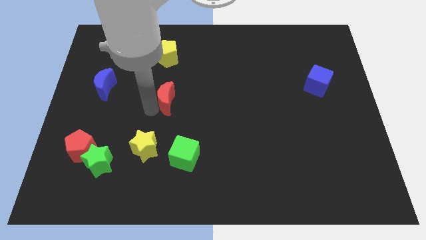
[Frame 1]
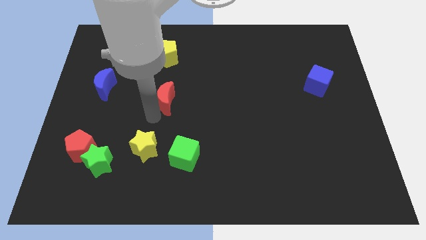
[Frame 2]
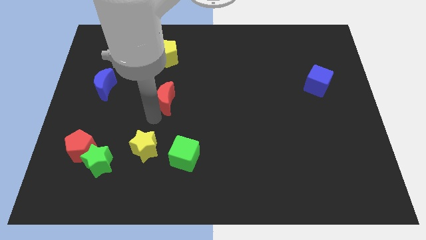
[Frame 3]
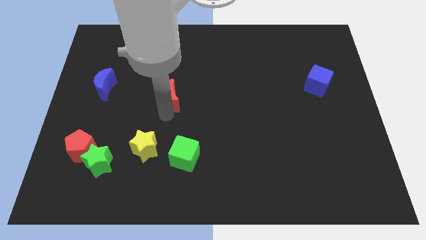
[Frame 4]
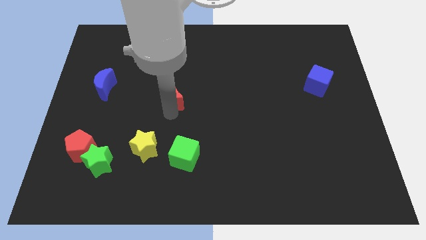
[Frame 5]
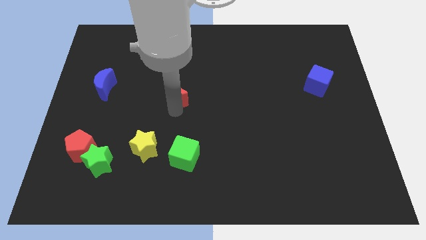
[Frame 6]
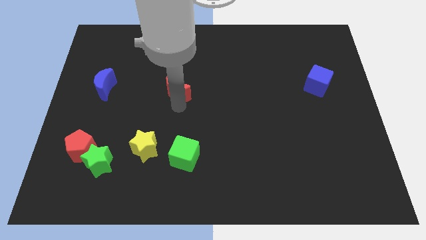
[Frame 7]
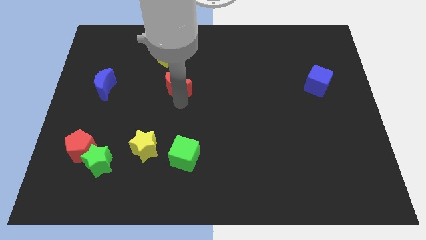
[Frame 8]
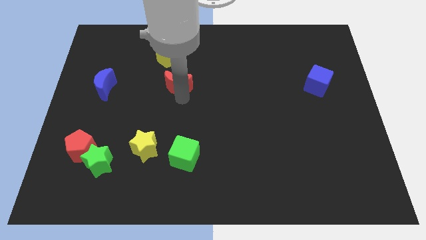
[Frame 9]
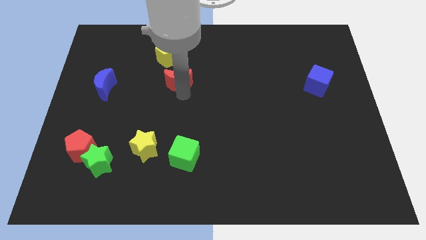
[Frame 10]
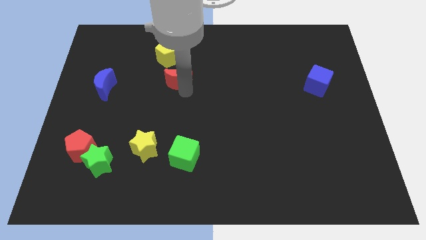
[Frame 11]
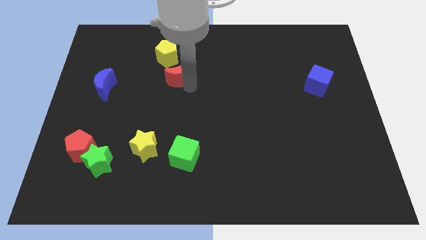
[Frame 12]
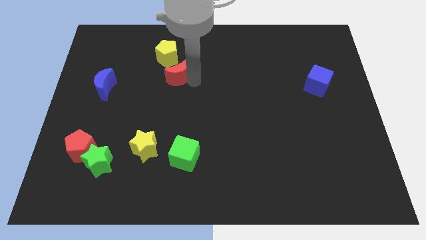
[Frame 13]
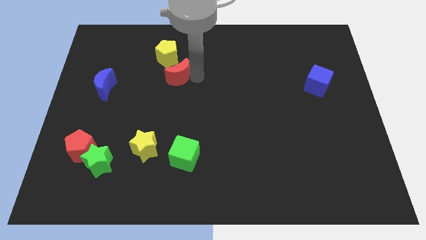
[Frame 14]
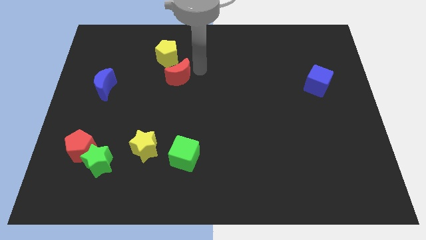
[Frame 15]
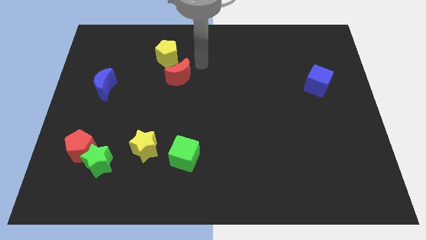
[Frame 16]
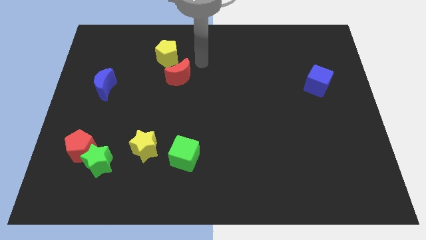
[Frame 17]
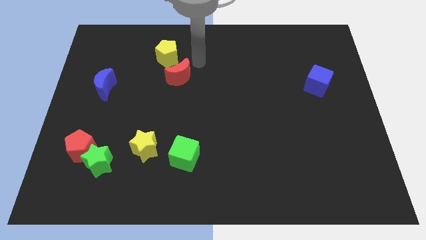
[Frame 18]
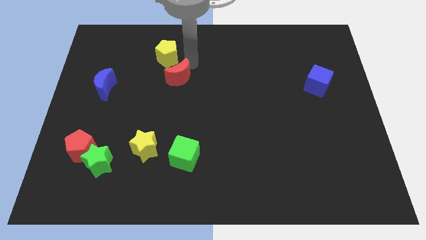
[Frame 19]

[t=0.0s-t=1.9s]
move the red moon to the bottom of the yellow pentagon

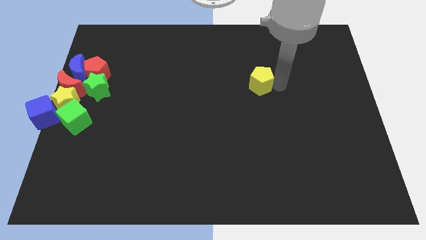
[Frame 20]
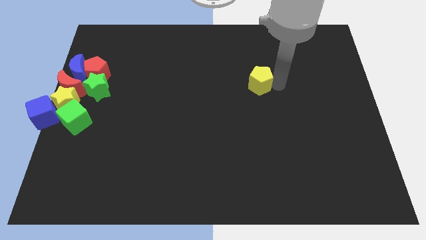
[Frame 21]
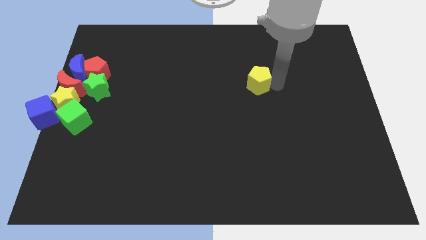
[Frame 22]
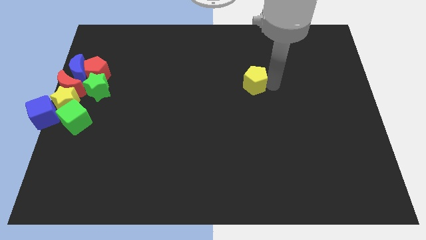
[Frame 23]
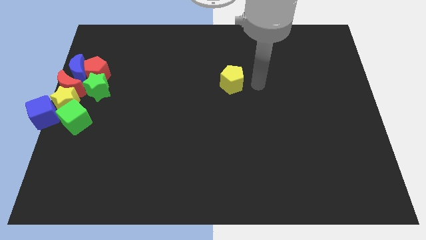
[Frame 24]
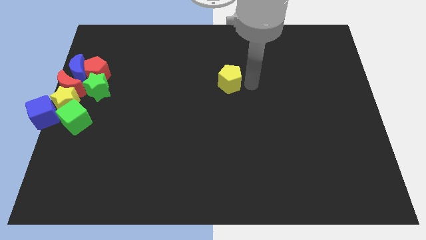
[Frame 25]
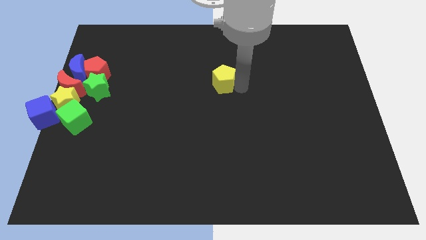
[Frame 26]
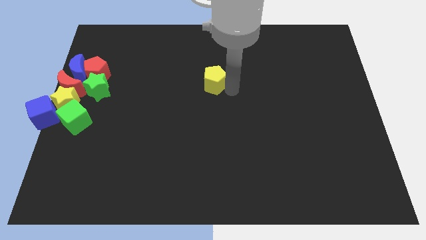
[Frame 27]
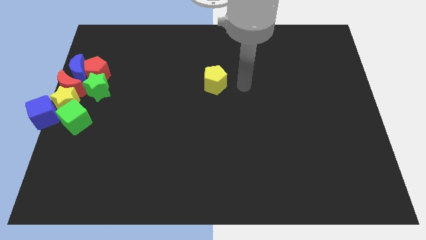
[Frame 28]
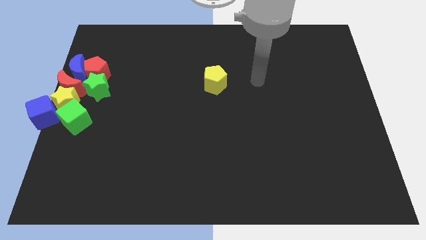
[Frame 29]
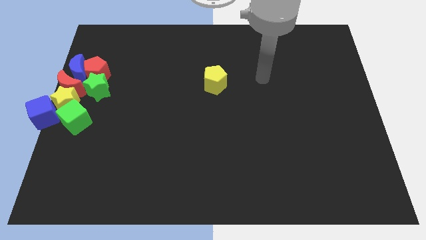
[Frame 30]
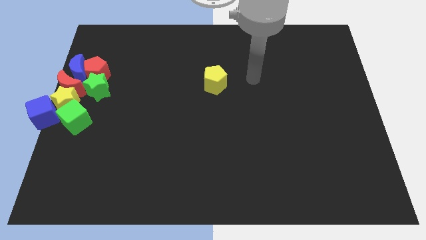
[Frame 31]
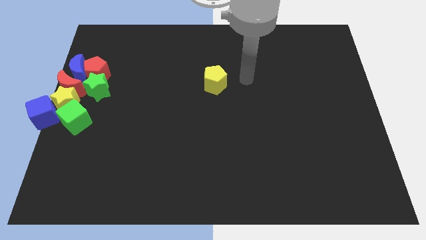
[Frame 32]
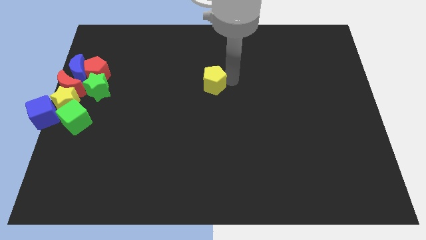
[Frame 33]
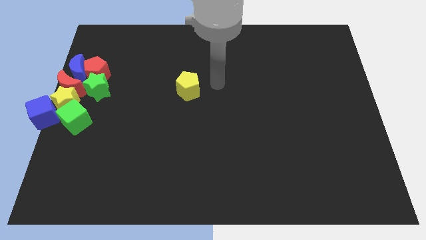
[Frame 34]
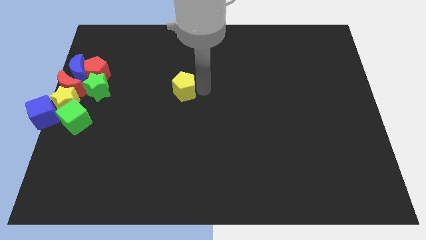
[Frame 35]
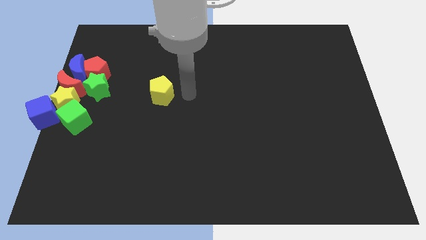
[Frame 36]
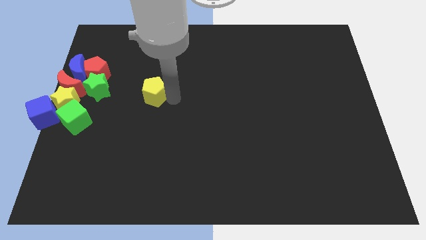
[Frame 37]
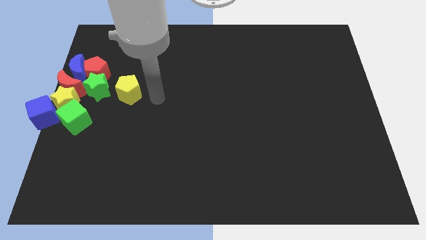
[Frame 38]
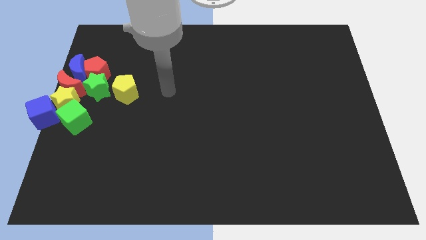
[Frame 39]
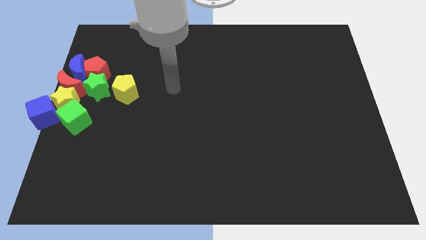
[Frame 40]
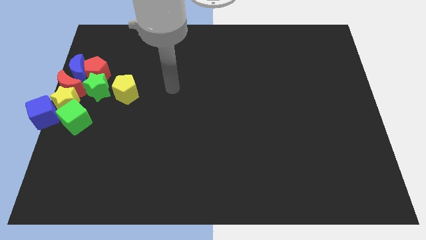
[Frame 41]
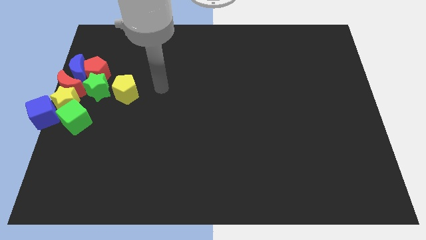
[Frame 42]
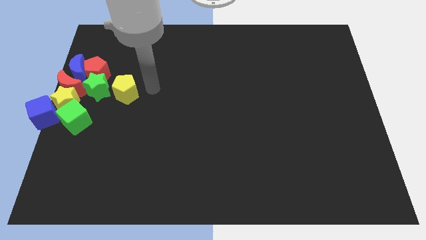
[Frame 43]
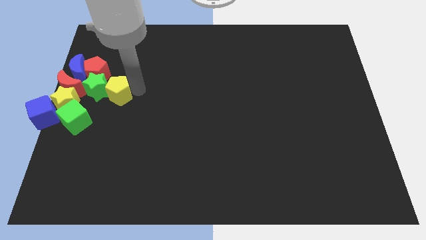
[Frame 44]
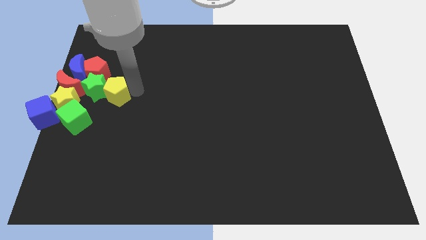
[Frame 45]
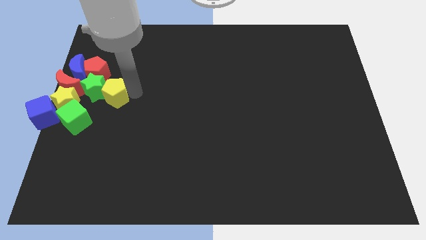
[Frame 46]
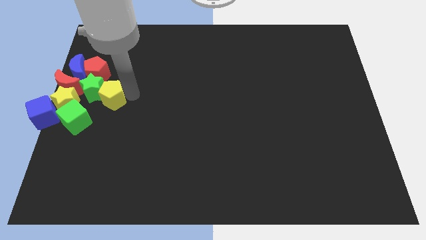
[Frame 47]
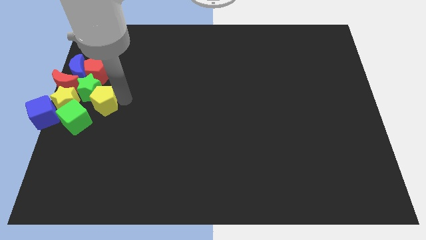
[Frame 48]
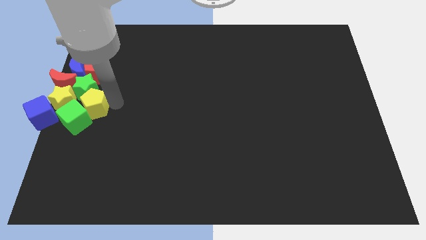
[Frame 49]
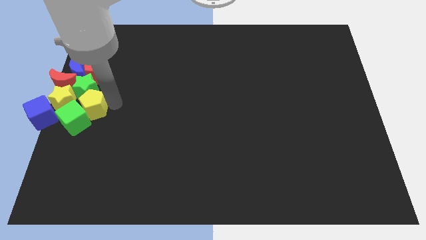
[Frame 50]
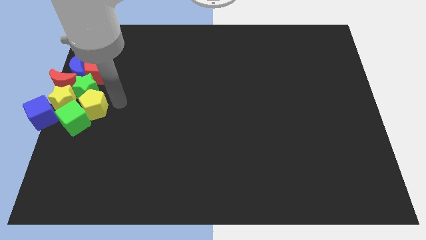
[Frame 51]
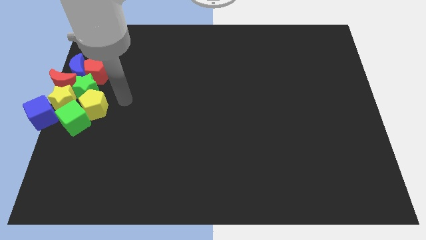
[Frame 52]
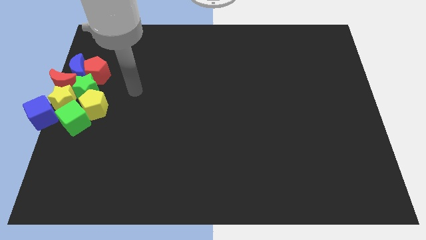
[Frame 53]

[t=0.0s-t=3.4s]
place the yellow pentagon to the group of blocks at the center left side of the board

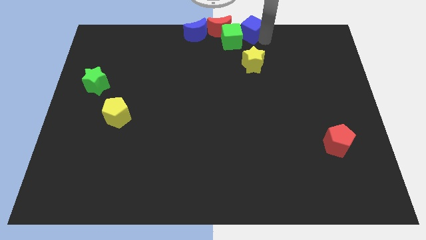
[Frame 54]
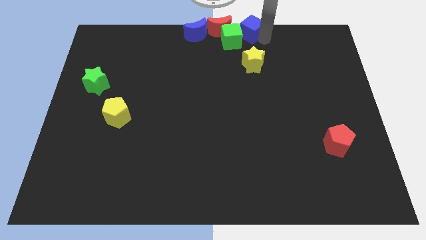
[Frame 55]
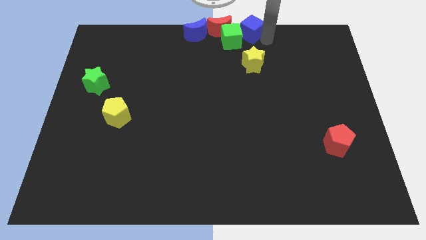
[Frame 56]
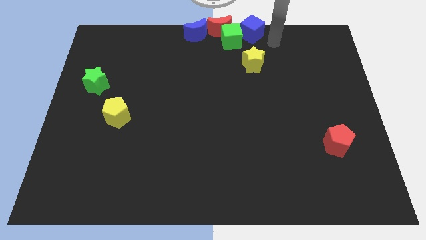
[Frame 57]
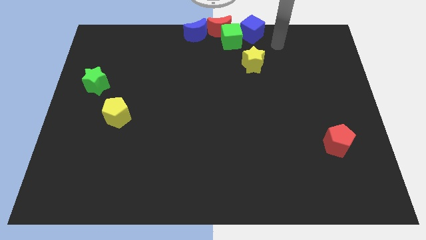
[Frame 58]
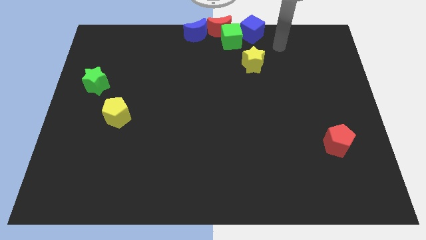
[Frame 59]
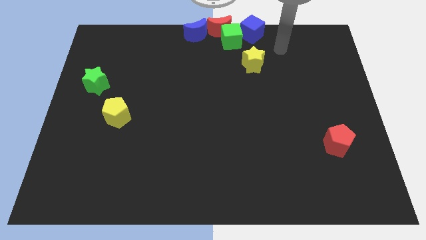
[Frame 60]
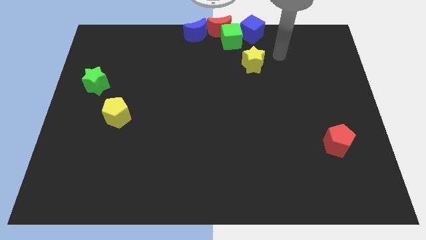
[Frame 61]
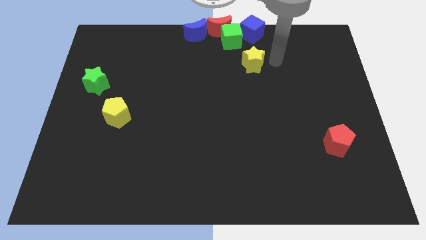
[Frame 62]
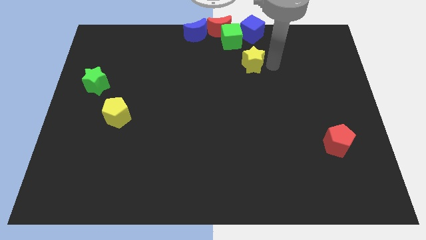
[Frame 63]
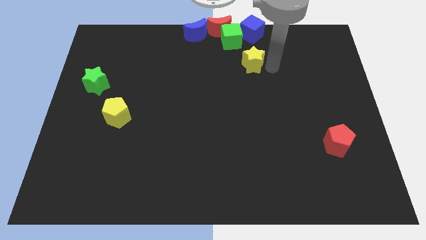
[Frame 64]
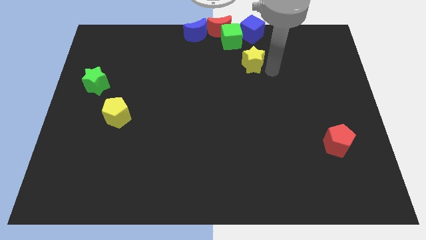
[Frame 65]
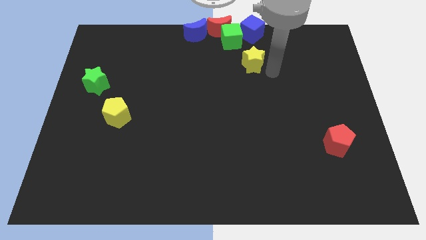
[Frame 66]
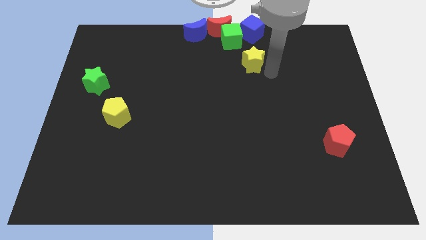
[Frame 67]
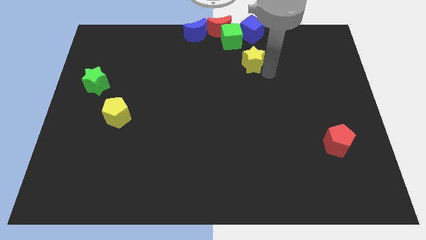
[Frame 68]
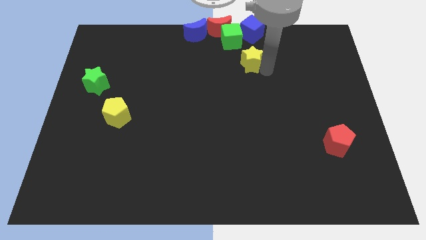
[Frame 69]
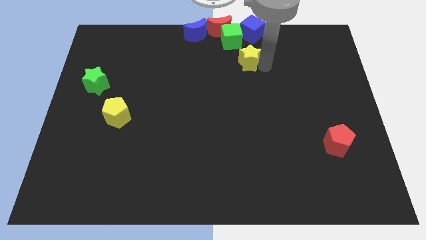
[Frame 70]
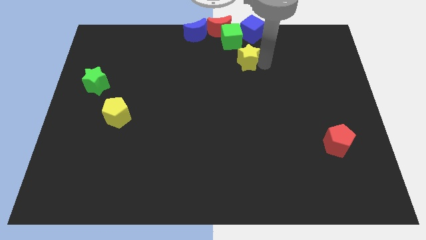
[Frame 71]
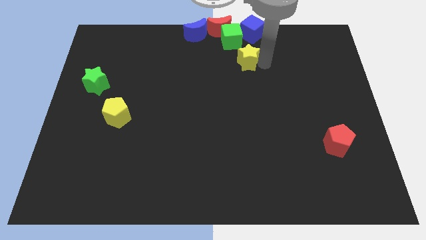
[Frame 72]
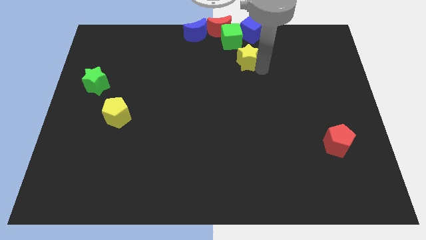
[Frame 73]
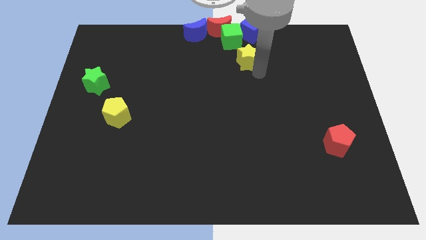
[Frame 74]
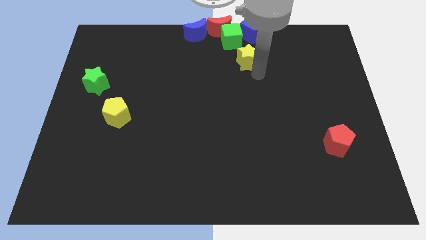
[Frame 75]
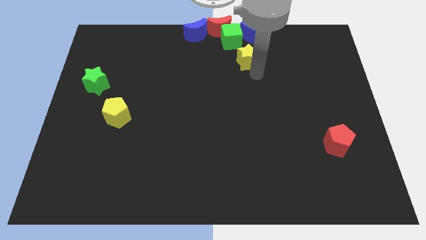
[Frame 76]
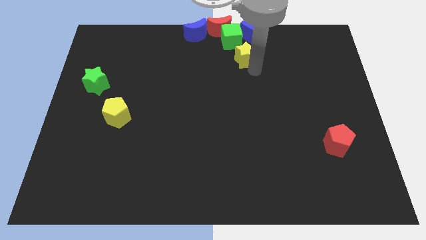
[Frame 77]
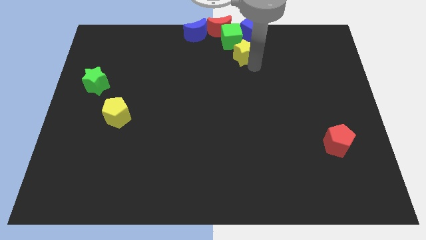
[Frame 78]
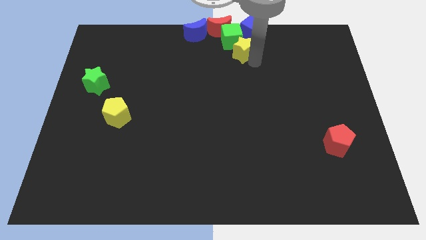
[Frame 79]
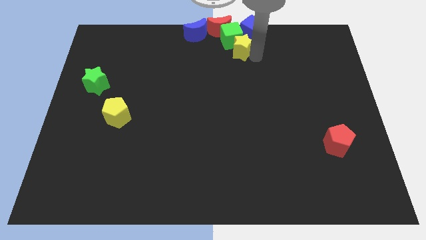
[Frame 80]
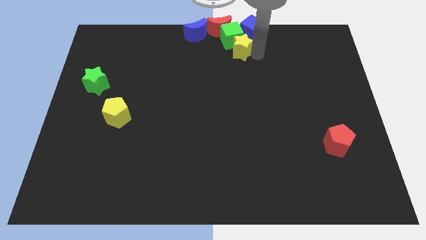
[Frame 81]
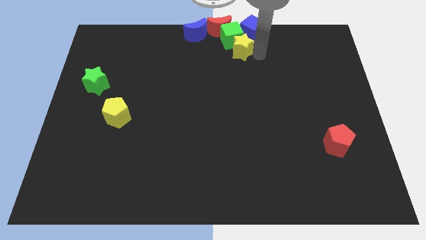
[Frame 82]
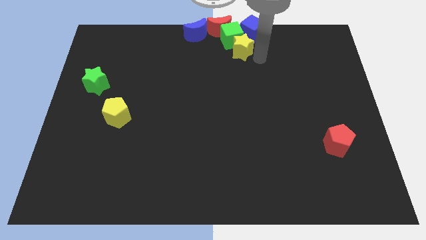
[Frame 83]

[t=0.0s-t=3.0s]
place yellow star below green cube

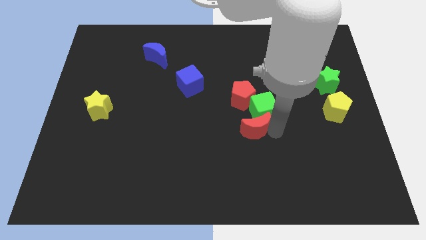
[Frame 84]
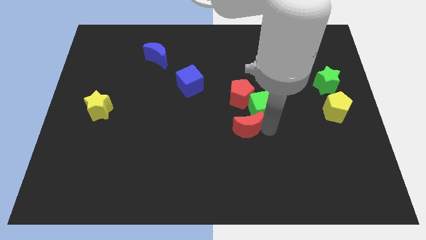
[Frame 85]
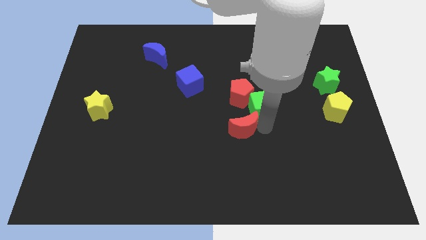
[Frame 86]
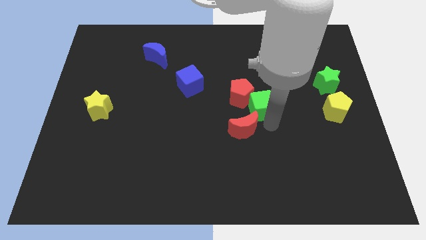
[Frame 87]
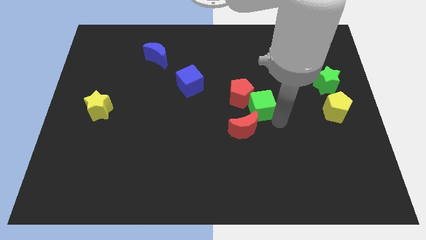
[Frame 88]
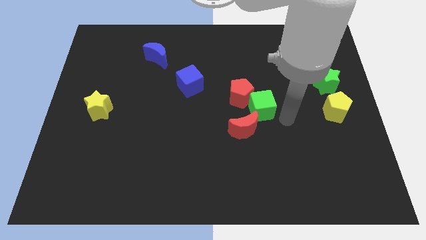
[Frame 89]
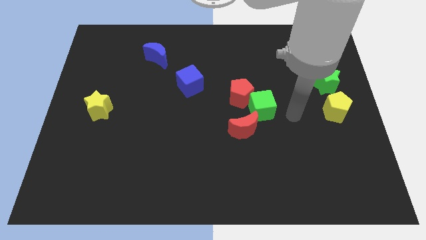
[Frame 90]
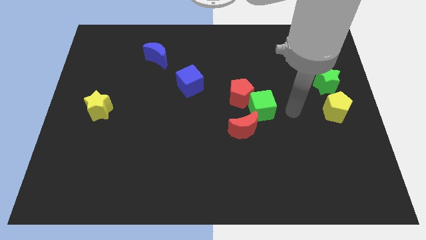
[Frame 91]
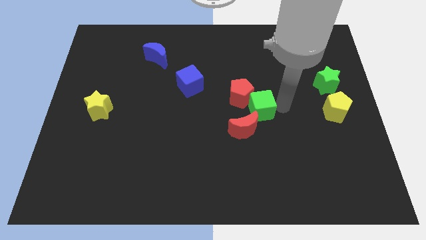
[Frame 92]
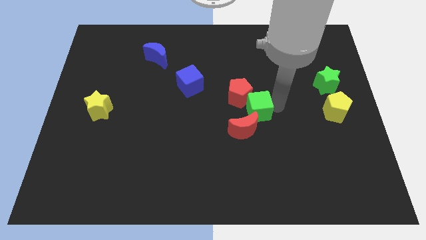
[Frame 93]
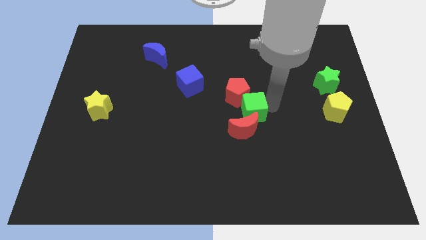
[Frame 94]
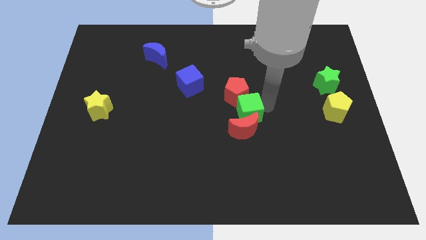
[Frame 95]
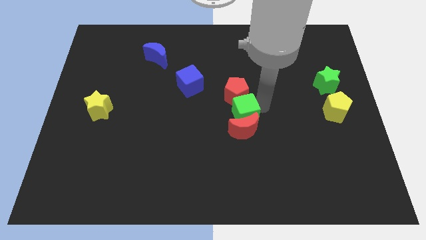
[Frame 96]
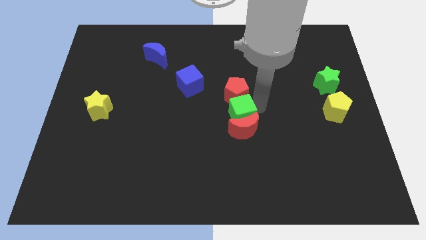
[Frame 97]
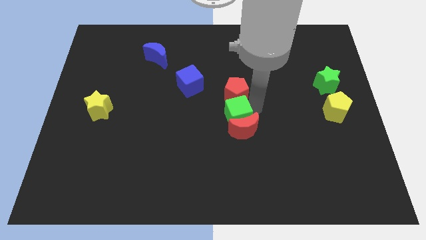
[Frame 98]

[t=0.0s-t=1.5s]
put the green cube in between the red blocks
